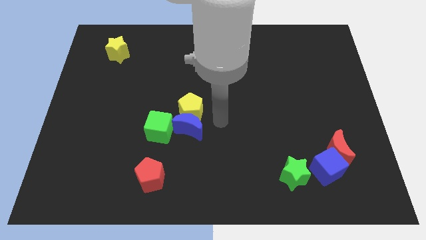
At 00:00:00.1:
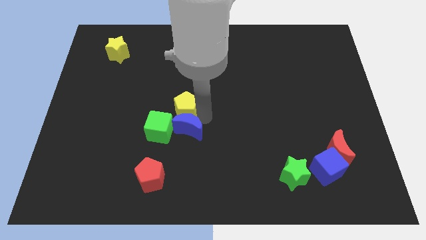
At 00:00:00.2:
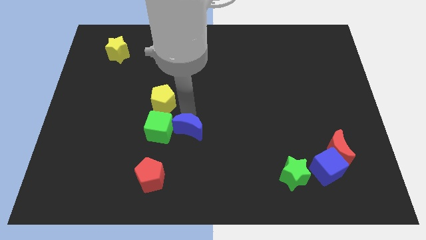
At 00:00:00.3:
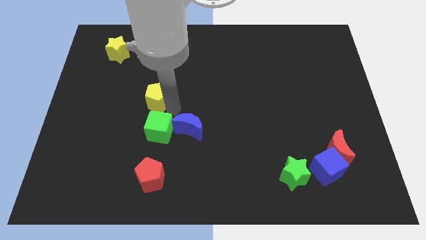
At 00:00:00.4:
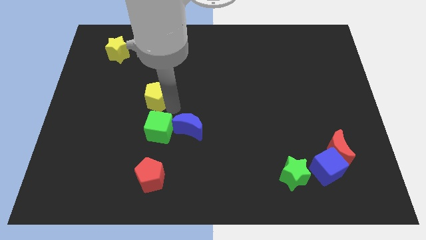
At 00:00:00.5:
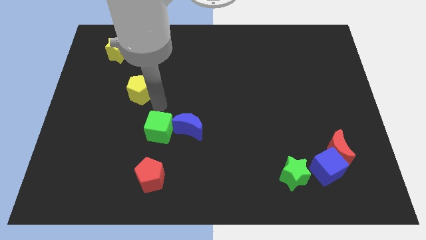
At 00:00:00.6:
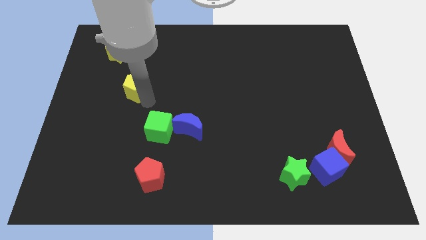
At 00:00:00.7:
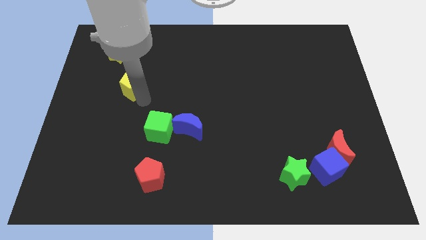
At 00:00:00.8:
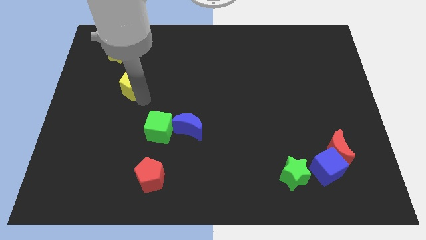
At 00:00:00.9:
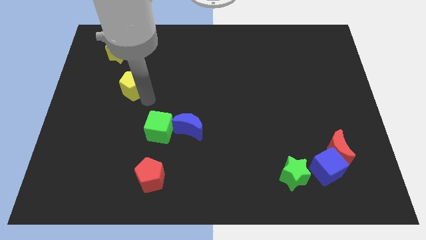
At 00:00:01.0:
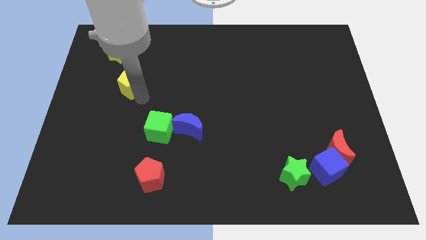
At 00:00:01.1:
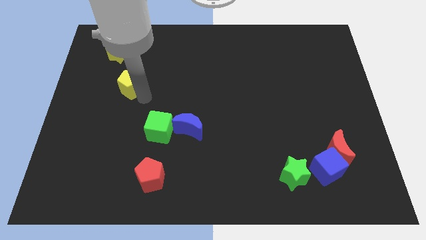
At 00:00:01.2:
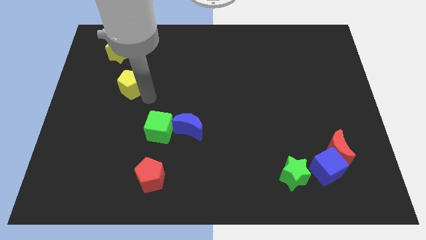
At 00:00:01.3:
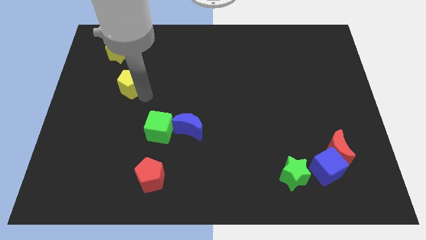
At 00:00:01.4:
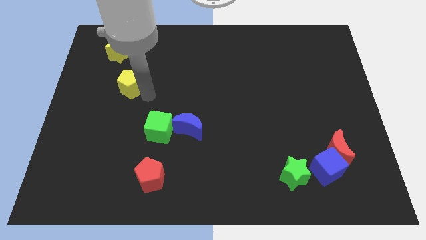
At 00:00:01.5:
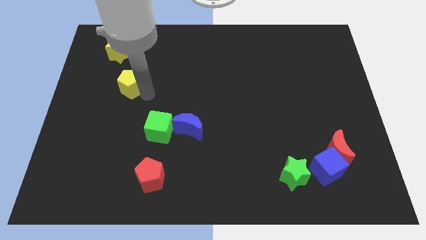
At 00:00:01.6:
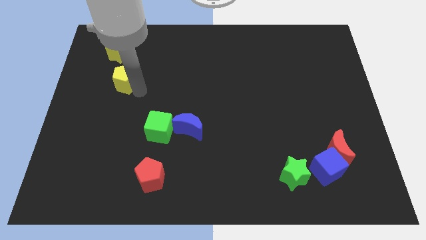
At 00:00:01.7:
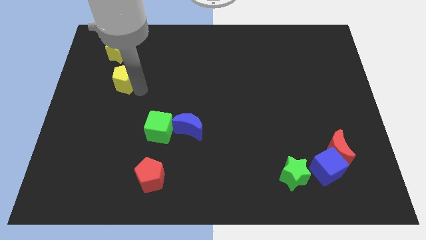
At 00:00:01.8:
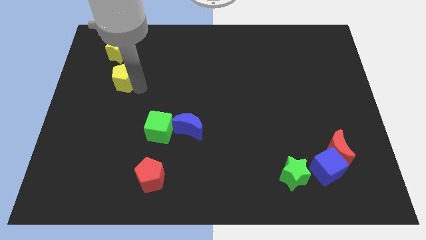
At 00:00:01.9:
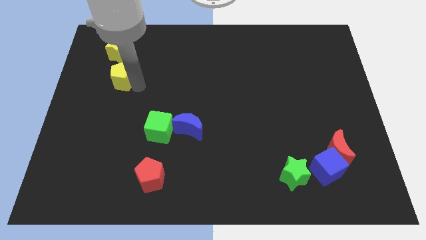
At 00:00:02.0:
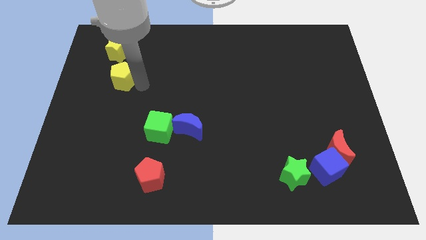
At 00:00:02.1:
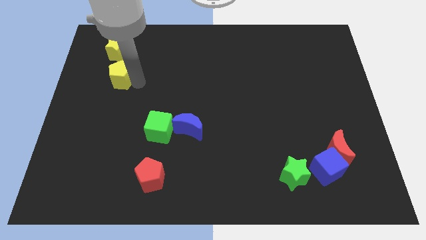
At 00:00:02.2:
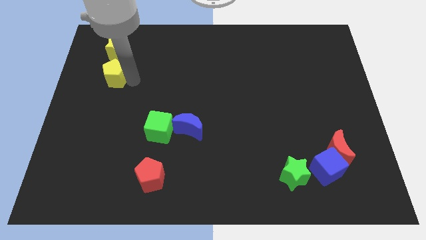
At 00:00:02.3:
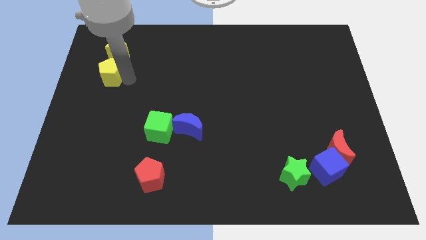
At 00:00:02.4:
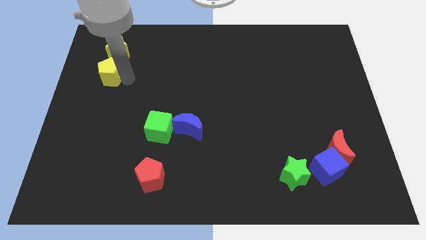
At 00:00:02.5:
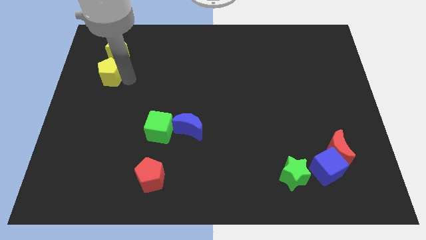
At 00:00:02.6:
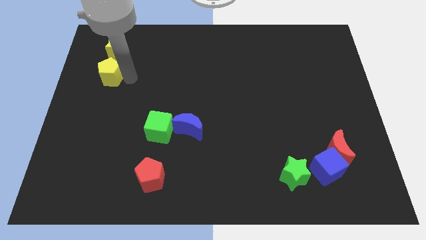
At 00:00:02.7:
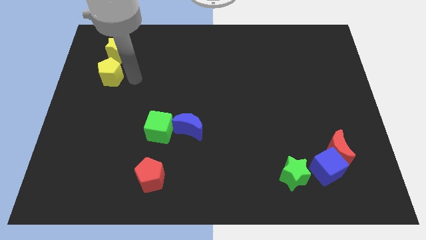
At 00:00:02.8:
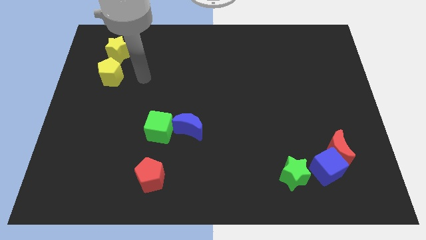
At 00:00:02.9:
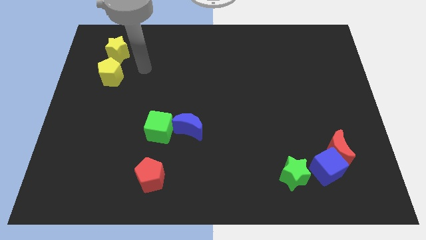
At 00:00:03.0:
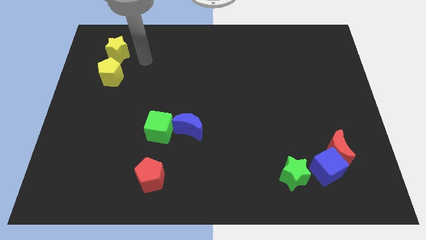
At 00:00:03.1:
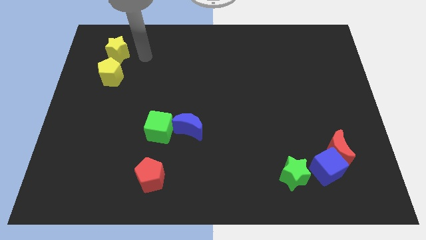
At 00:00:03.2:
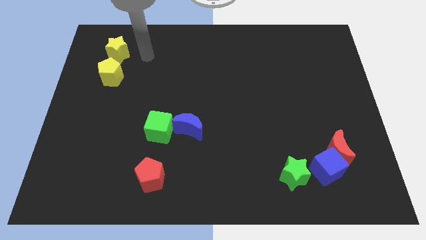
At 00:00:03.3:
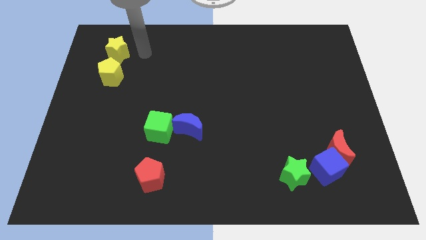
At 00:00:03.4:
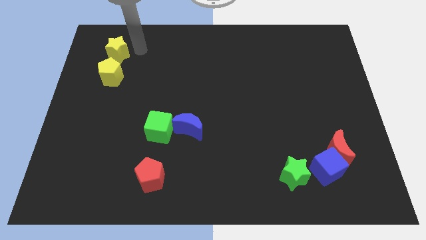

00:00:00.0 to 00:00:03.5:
place the yellow pentagon to the bottom of the yellow star

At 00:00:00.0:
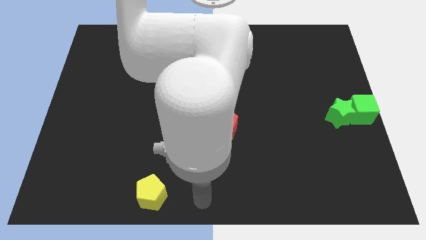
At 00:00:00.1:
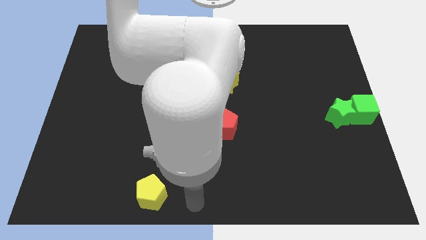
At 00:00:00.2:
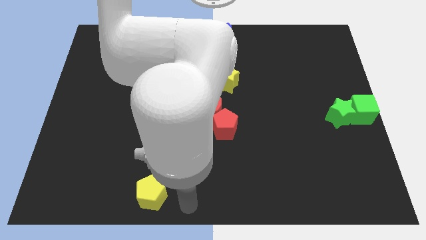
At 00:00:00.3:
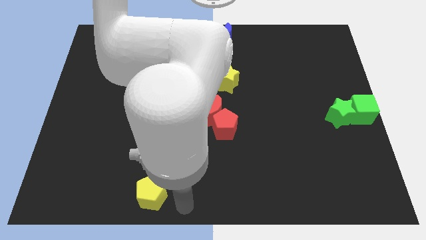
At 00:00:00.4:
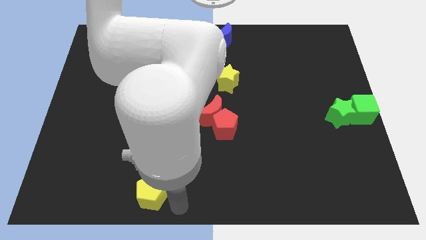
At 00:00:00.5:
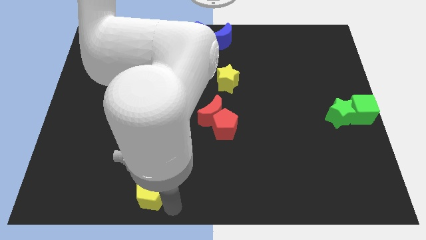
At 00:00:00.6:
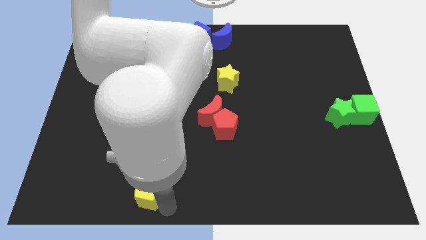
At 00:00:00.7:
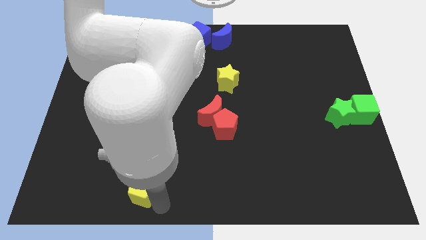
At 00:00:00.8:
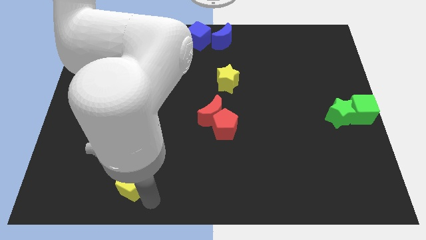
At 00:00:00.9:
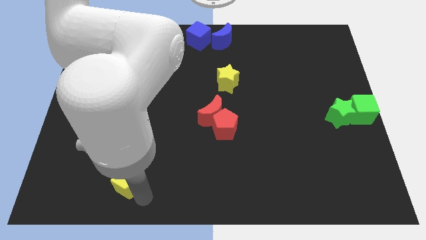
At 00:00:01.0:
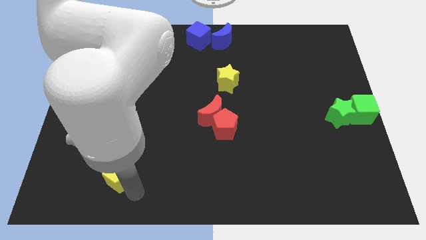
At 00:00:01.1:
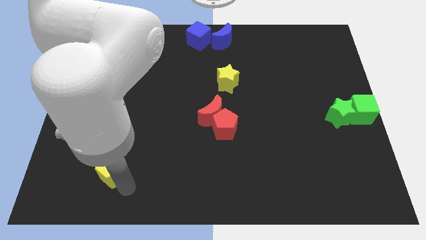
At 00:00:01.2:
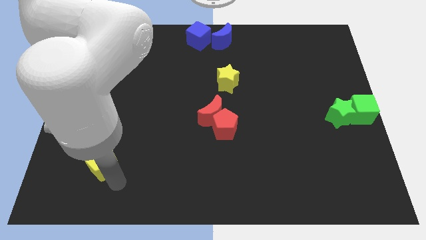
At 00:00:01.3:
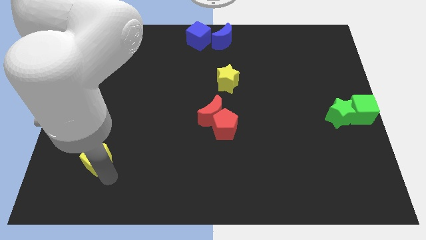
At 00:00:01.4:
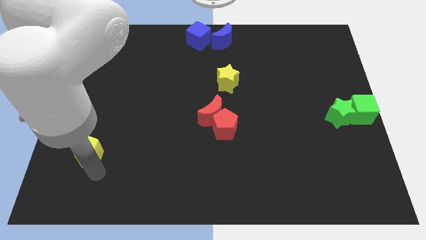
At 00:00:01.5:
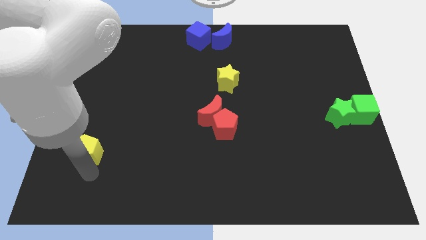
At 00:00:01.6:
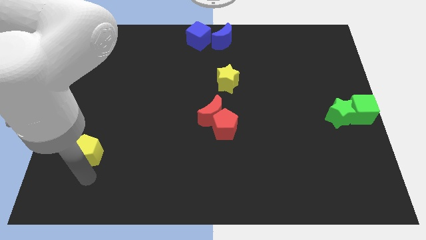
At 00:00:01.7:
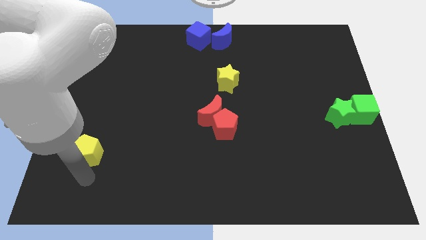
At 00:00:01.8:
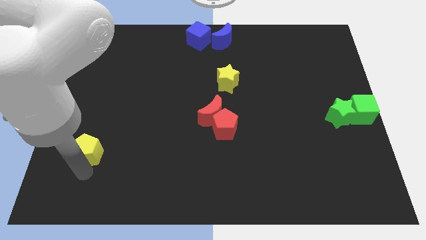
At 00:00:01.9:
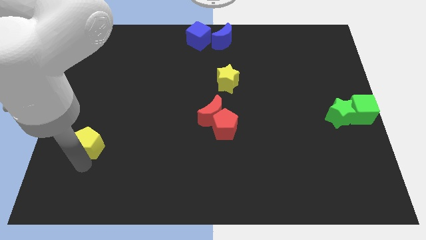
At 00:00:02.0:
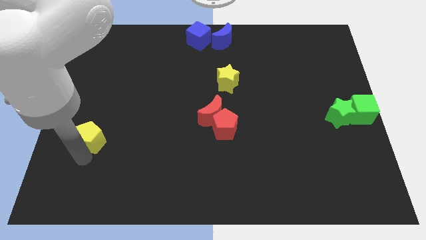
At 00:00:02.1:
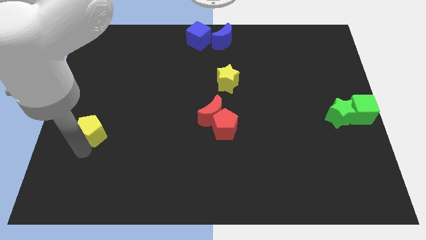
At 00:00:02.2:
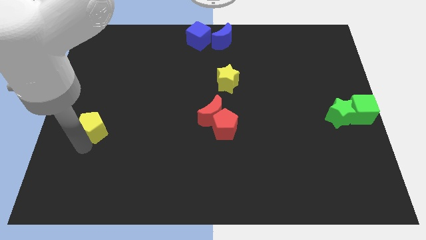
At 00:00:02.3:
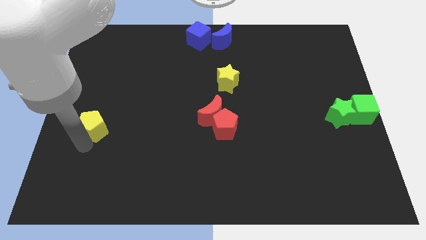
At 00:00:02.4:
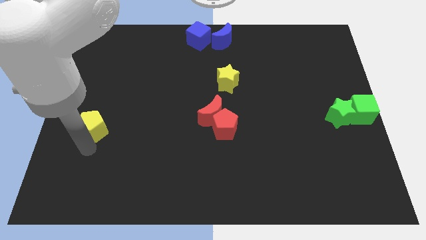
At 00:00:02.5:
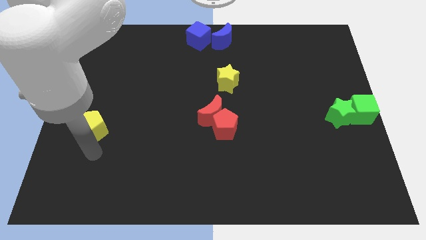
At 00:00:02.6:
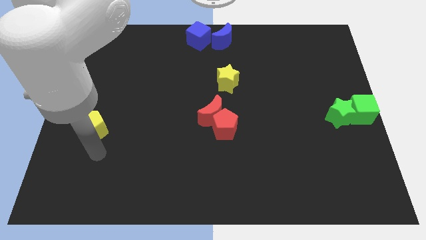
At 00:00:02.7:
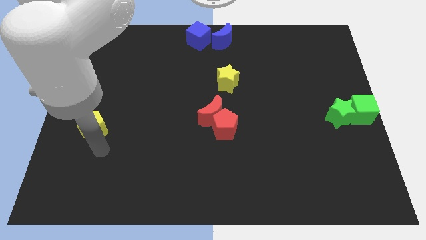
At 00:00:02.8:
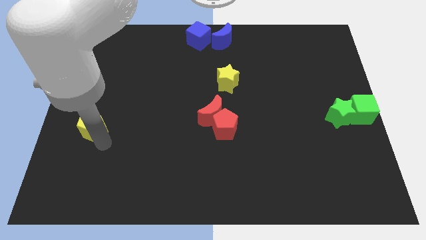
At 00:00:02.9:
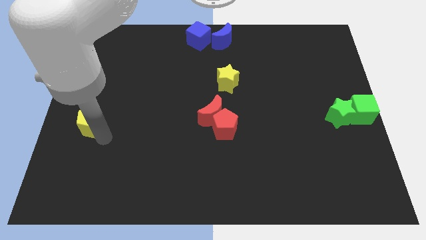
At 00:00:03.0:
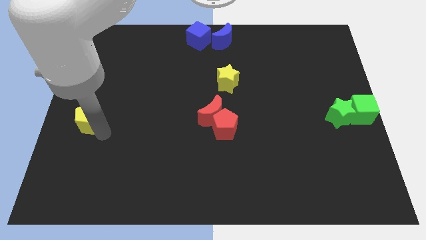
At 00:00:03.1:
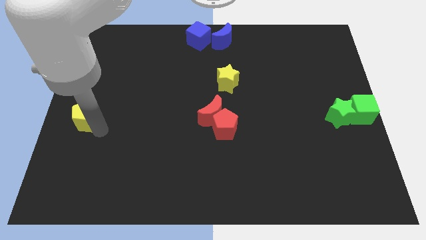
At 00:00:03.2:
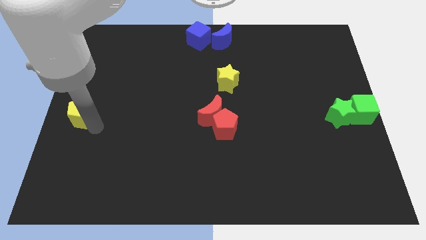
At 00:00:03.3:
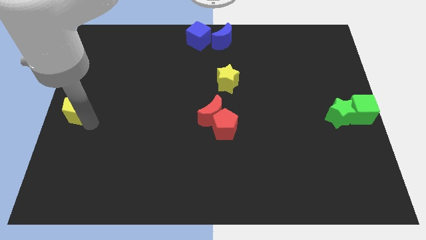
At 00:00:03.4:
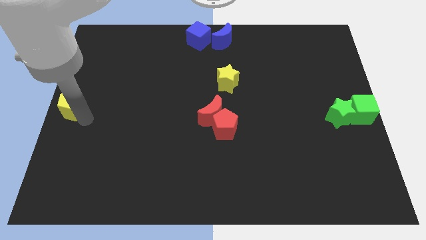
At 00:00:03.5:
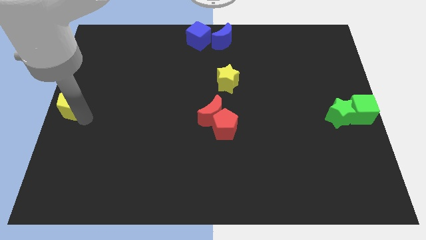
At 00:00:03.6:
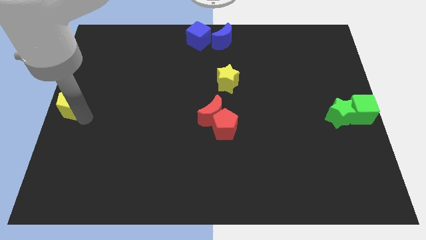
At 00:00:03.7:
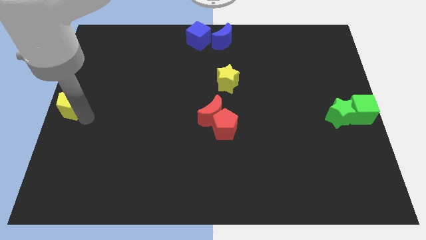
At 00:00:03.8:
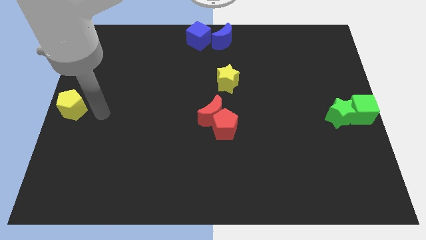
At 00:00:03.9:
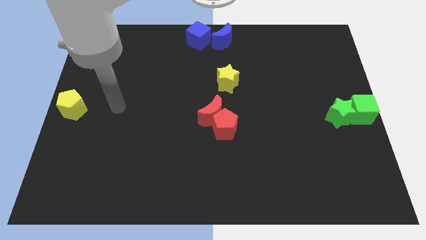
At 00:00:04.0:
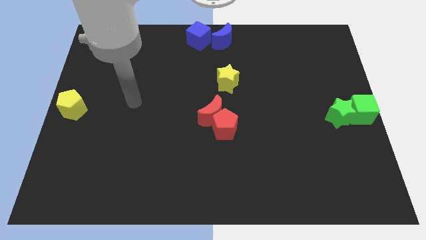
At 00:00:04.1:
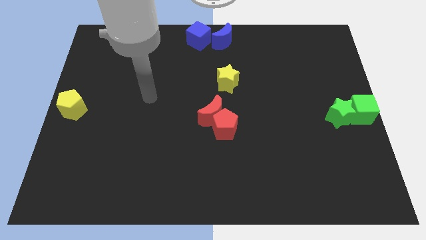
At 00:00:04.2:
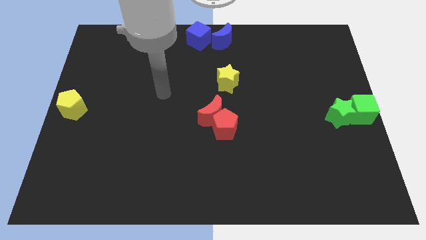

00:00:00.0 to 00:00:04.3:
move the yellow pentagon to the centre left of the board

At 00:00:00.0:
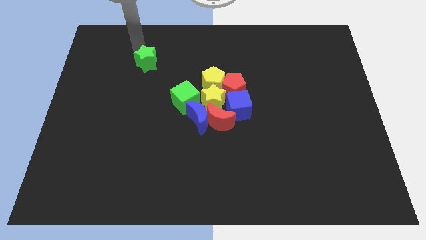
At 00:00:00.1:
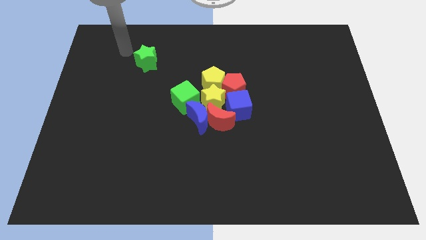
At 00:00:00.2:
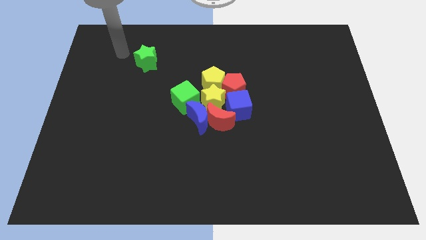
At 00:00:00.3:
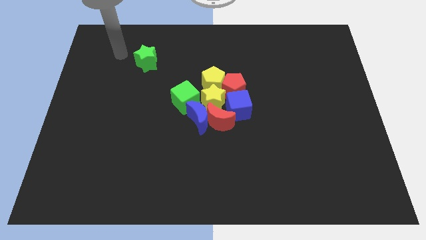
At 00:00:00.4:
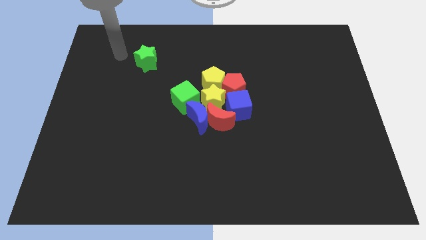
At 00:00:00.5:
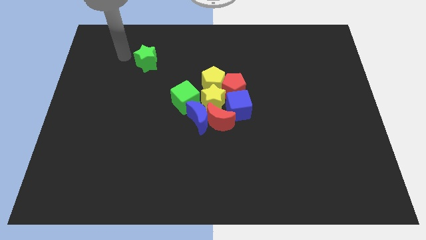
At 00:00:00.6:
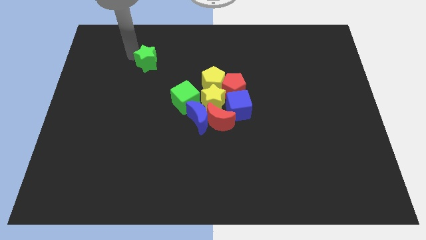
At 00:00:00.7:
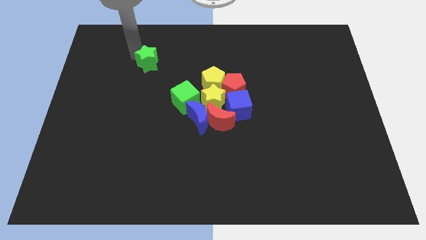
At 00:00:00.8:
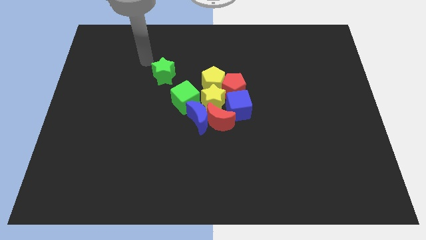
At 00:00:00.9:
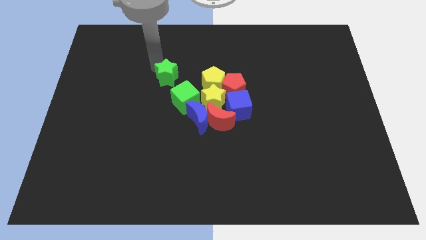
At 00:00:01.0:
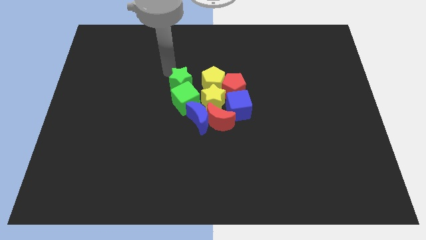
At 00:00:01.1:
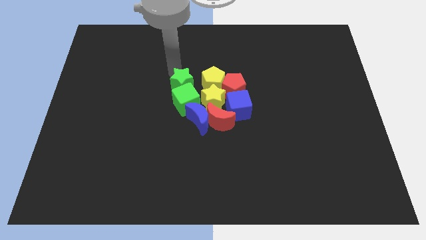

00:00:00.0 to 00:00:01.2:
slide the green star above the green cube
